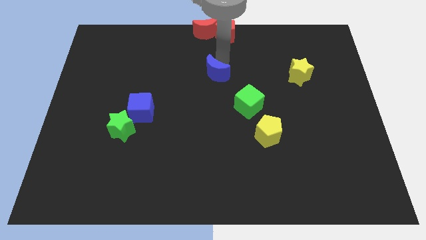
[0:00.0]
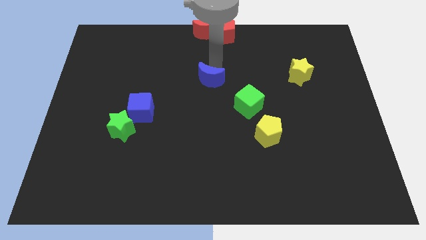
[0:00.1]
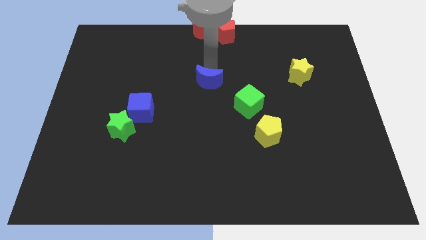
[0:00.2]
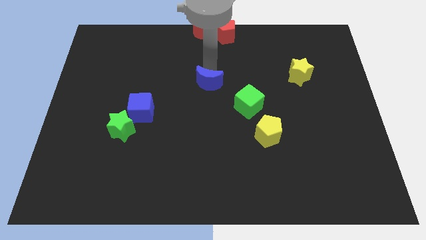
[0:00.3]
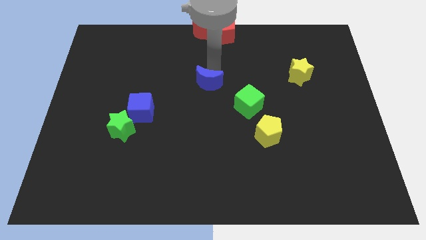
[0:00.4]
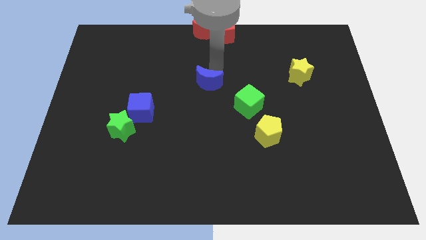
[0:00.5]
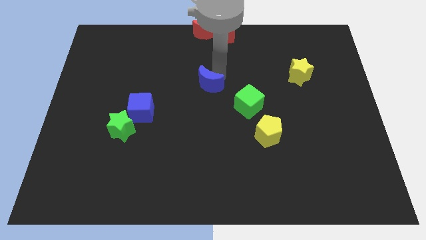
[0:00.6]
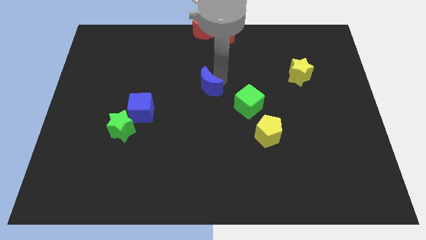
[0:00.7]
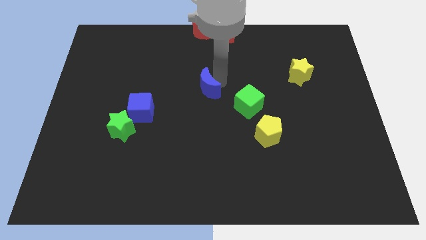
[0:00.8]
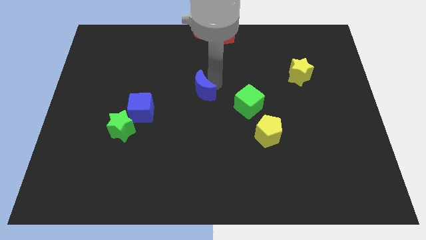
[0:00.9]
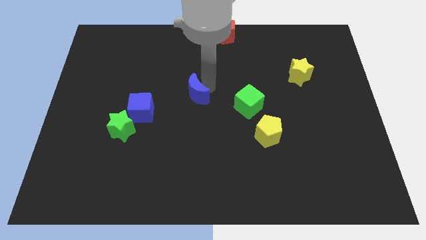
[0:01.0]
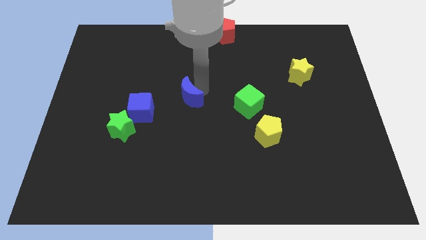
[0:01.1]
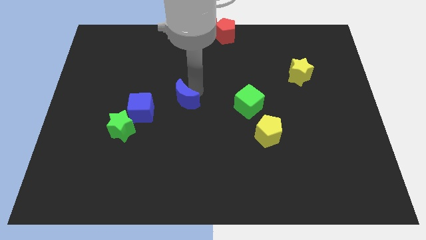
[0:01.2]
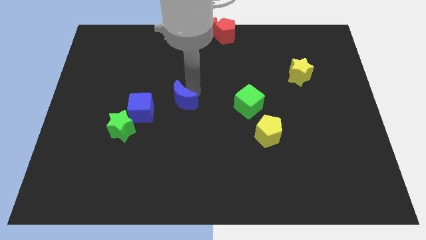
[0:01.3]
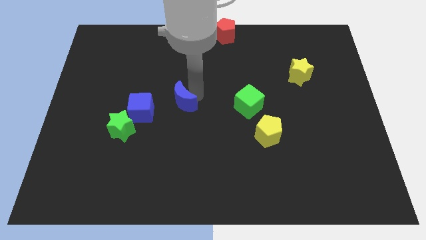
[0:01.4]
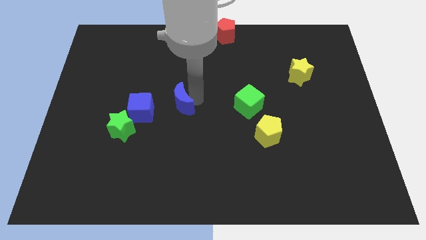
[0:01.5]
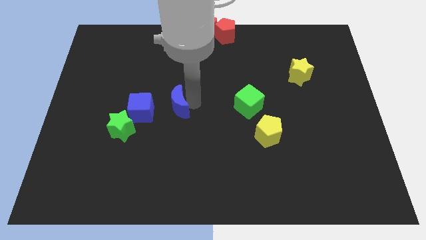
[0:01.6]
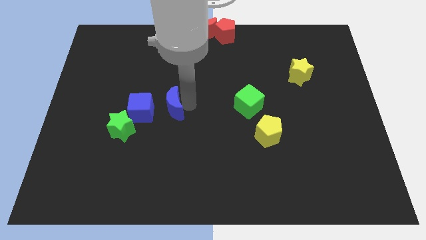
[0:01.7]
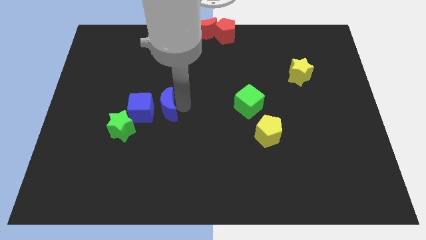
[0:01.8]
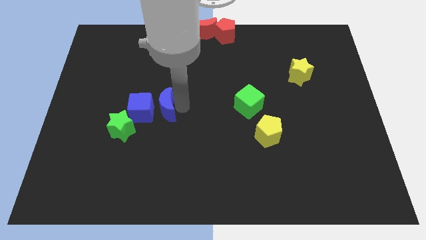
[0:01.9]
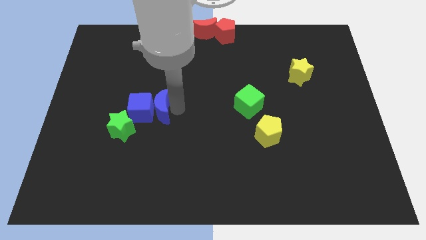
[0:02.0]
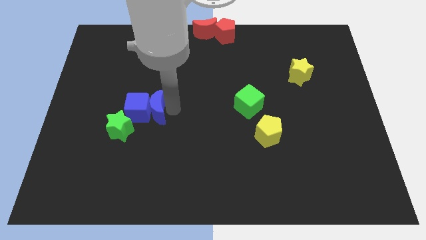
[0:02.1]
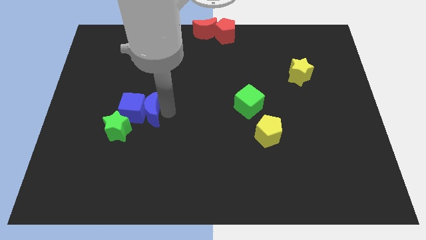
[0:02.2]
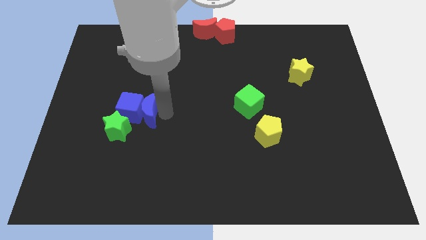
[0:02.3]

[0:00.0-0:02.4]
push the blue moon into the blue cube

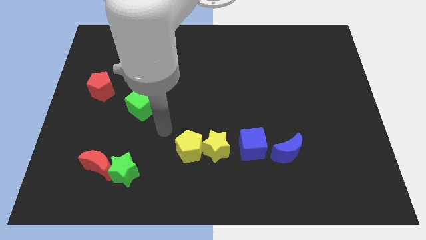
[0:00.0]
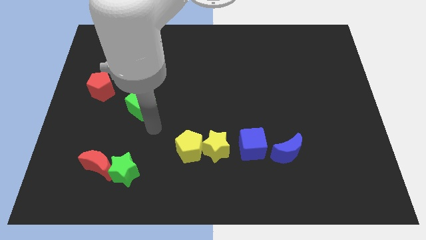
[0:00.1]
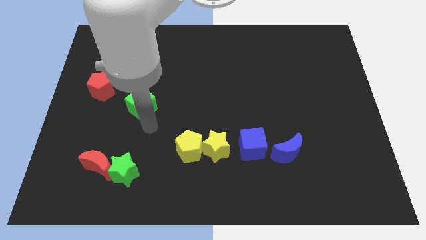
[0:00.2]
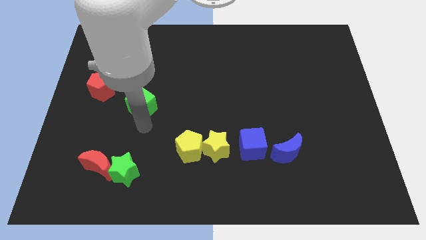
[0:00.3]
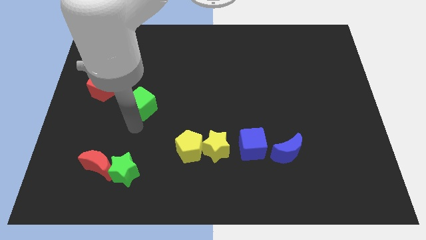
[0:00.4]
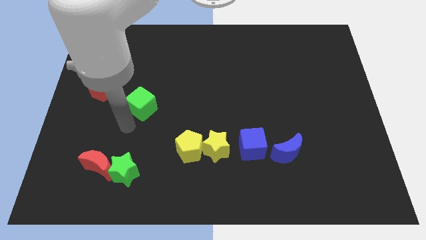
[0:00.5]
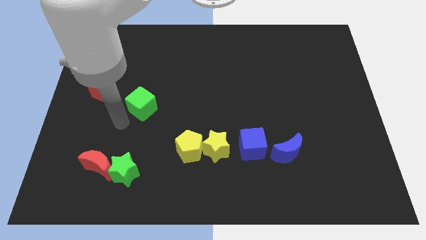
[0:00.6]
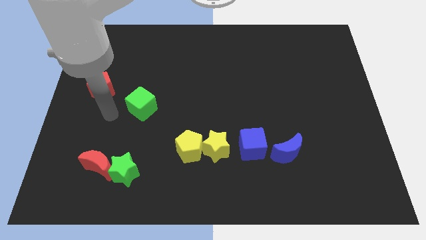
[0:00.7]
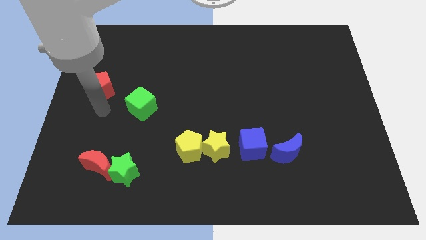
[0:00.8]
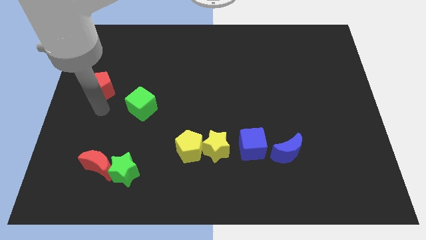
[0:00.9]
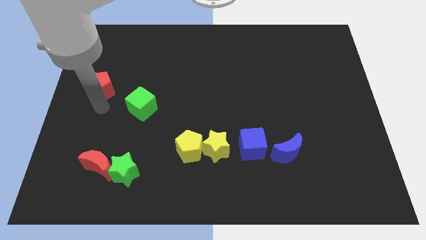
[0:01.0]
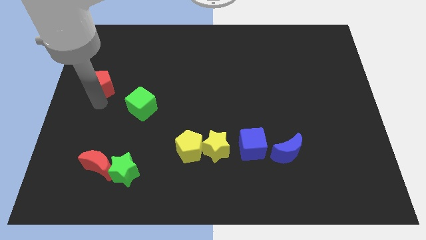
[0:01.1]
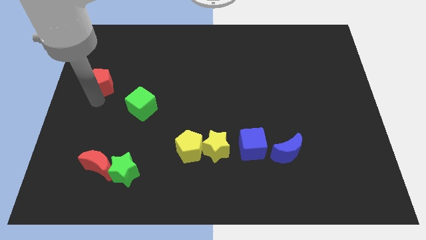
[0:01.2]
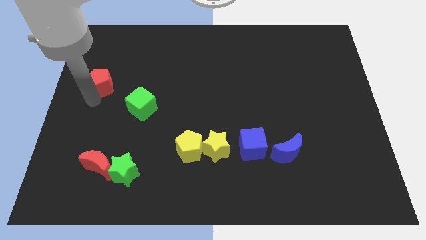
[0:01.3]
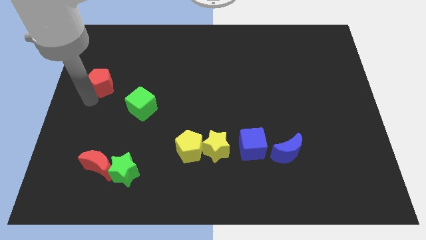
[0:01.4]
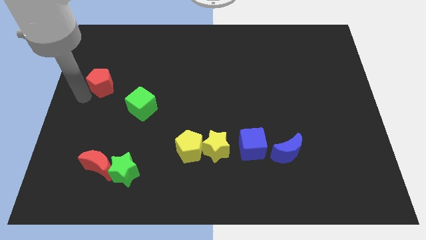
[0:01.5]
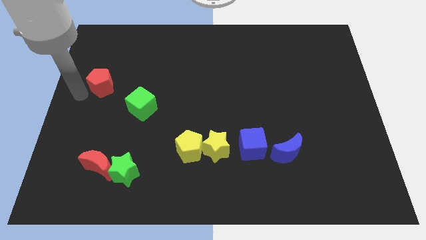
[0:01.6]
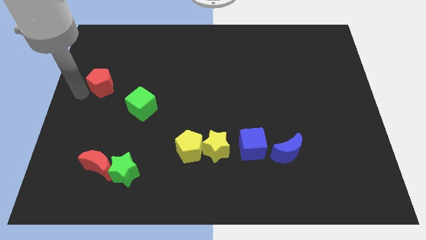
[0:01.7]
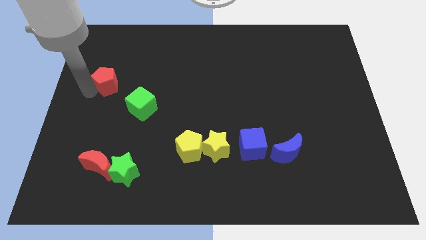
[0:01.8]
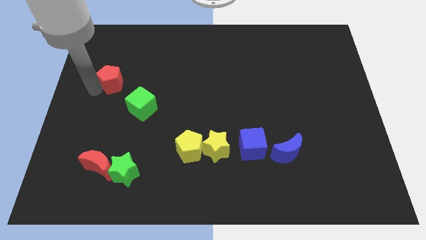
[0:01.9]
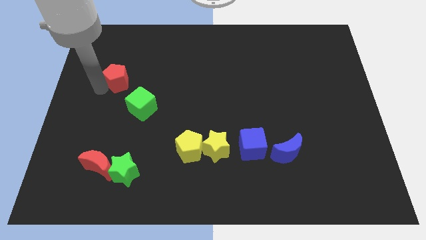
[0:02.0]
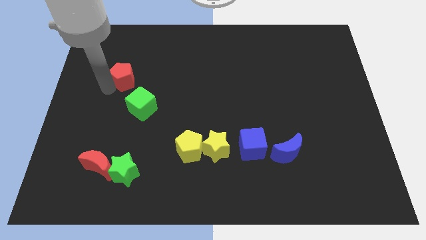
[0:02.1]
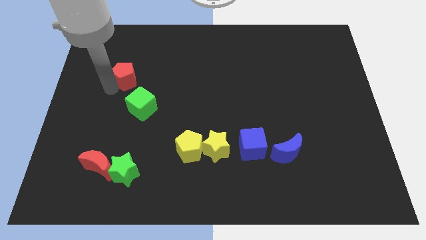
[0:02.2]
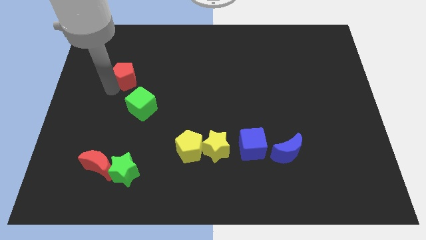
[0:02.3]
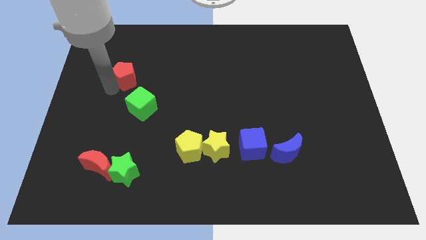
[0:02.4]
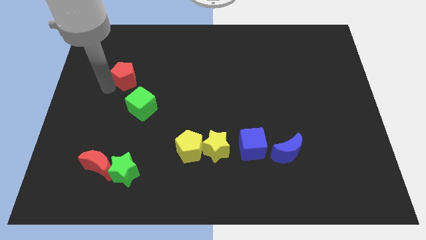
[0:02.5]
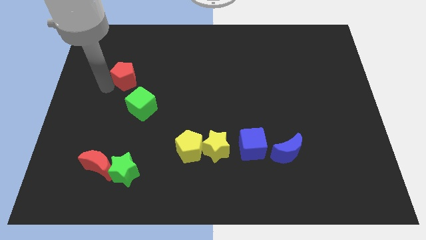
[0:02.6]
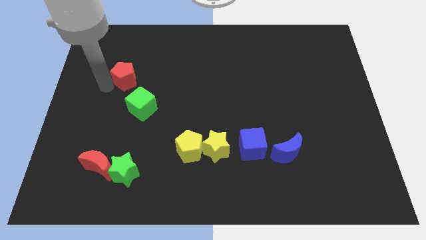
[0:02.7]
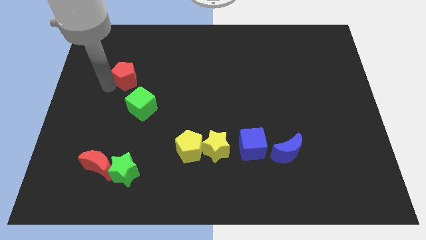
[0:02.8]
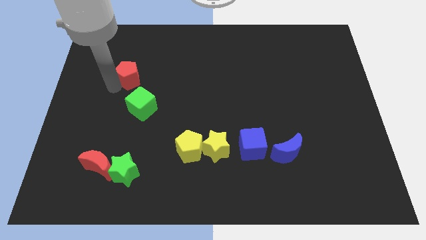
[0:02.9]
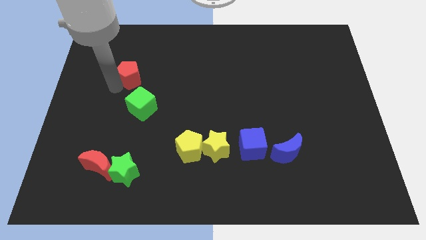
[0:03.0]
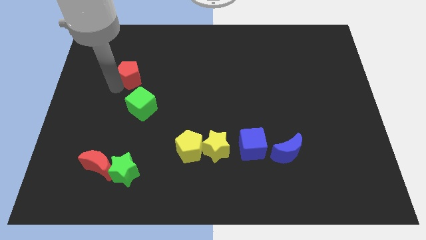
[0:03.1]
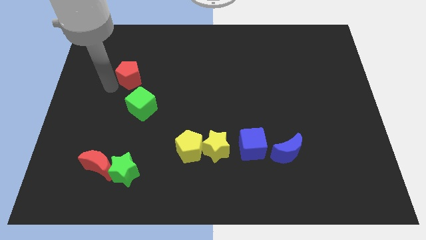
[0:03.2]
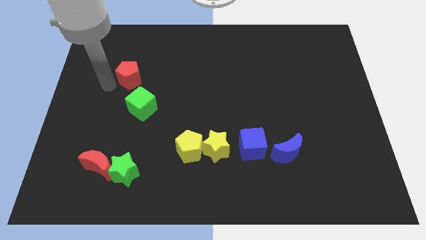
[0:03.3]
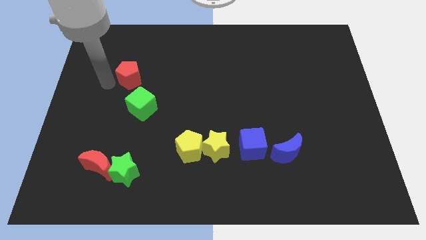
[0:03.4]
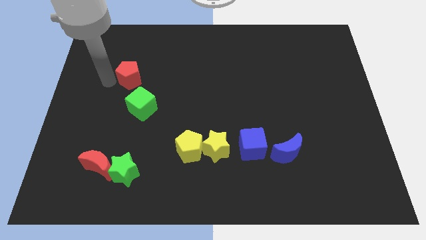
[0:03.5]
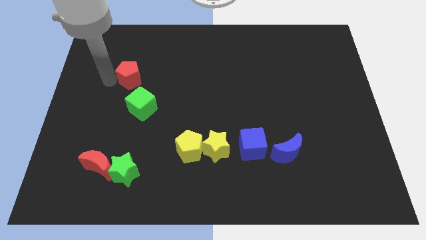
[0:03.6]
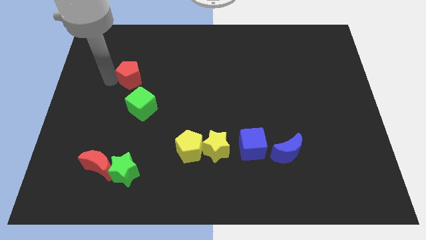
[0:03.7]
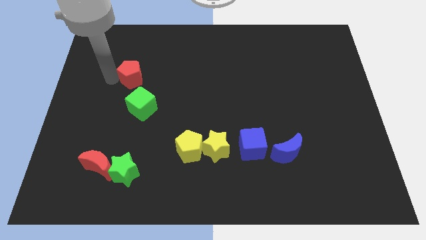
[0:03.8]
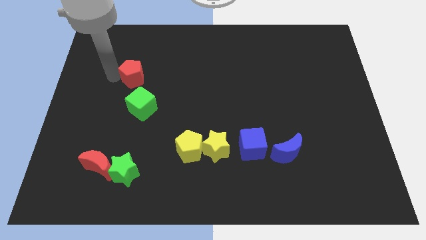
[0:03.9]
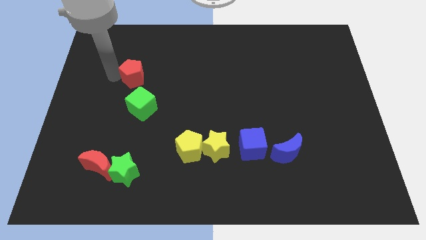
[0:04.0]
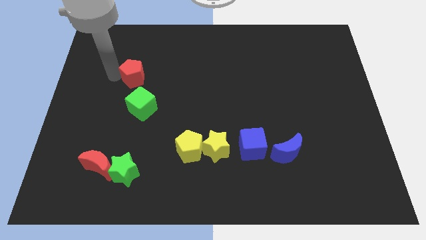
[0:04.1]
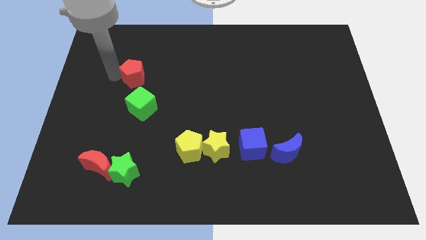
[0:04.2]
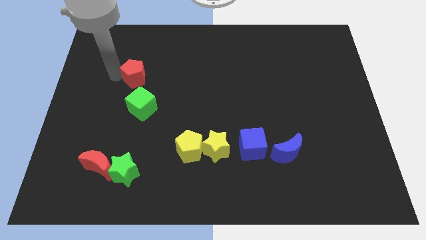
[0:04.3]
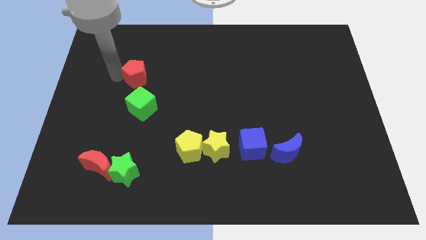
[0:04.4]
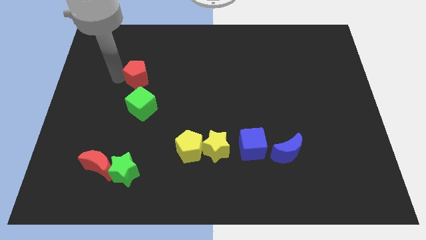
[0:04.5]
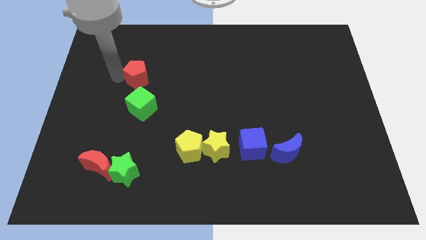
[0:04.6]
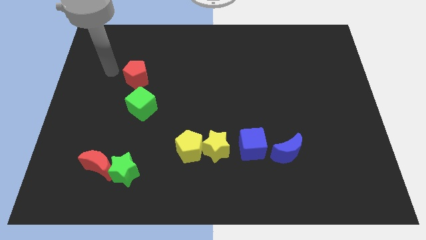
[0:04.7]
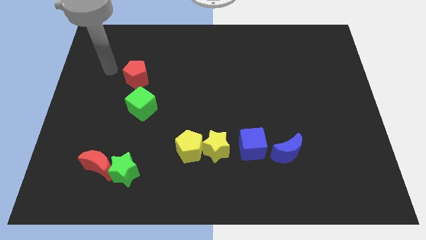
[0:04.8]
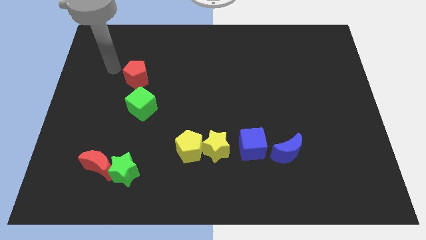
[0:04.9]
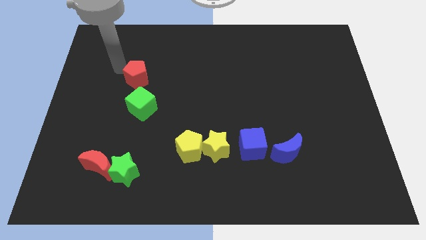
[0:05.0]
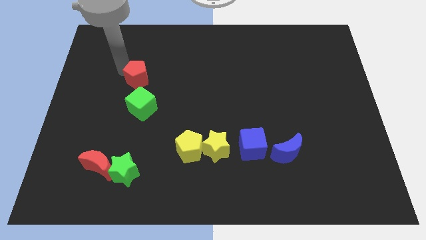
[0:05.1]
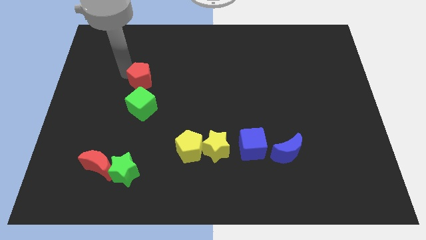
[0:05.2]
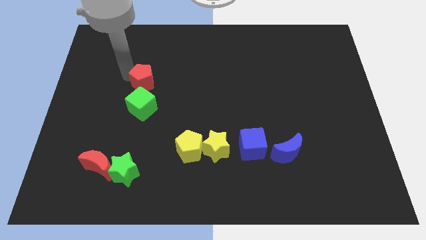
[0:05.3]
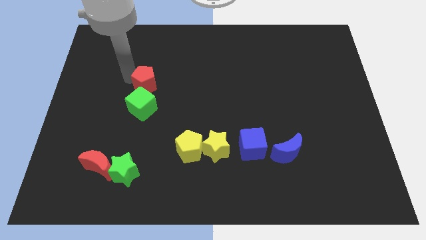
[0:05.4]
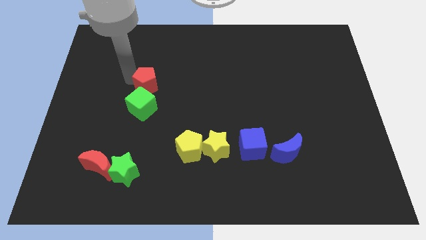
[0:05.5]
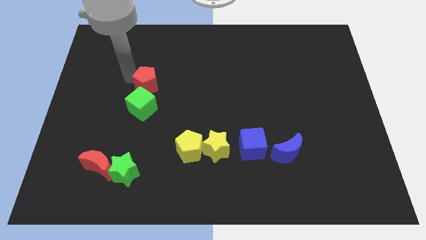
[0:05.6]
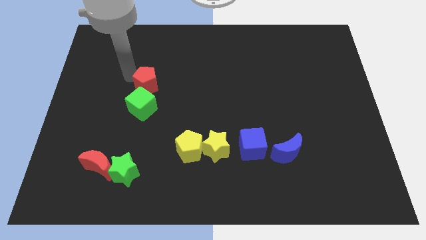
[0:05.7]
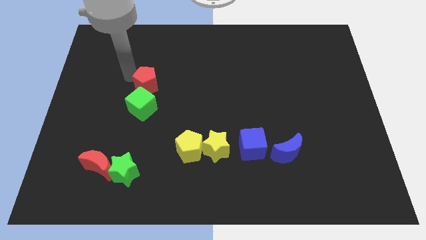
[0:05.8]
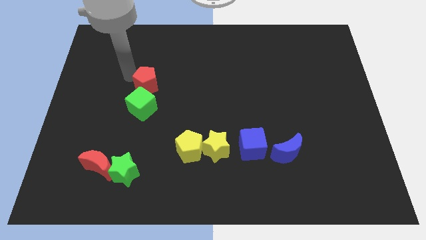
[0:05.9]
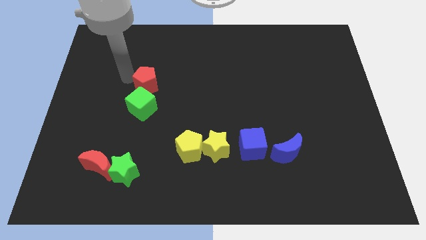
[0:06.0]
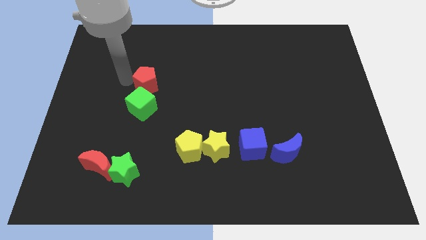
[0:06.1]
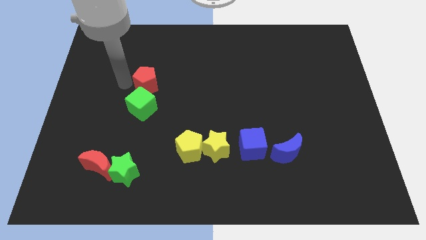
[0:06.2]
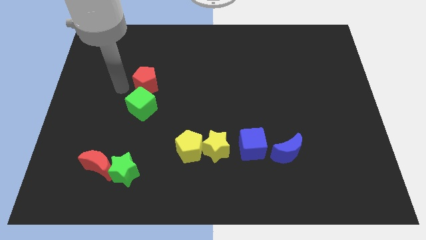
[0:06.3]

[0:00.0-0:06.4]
move the red pentagon to the top side of the green cube

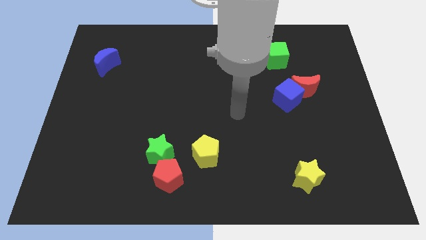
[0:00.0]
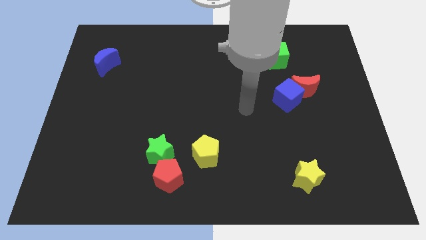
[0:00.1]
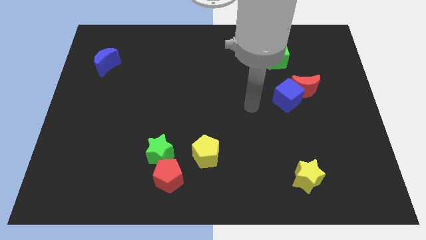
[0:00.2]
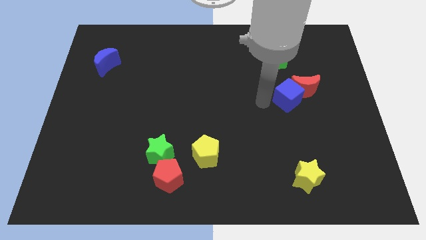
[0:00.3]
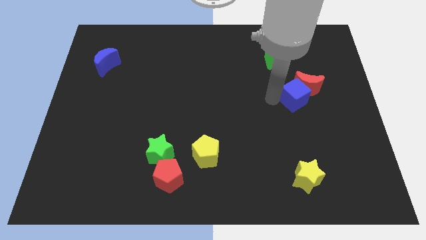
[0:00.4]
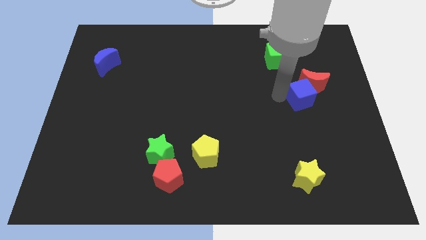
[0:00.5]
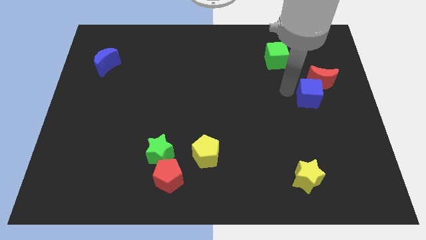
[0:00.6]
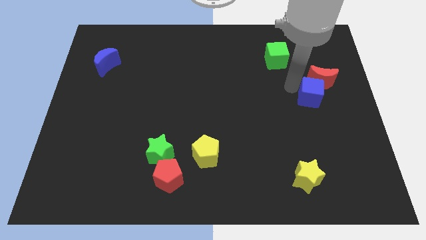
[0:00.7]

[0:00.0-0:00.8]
push blue cube and red moon together to the right
